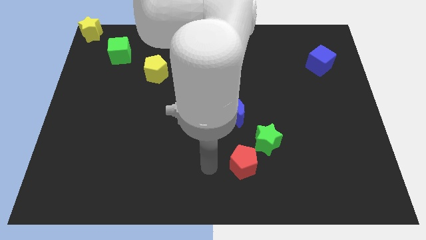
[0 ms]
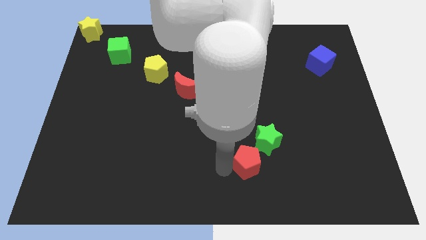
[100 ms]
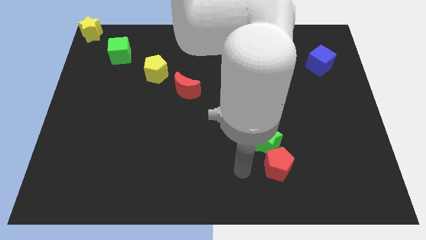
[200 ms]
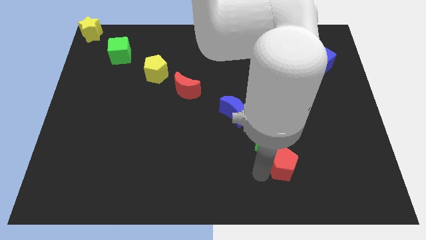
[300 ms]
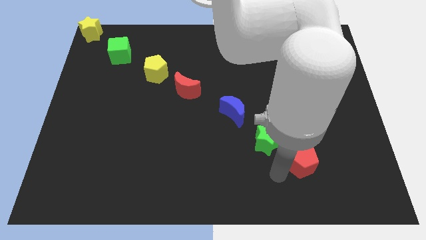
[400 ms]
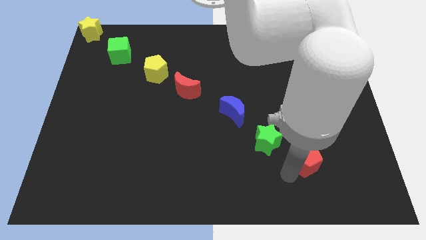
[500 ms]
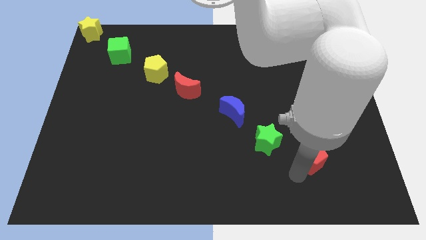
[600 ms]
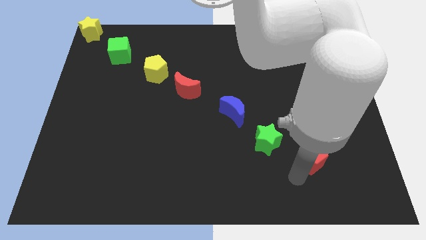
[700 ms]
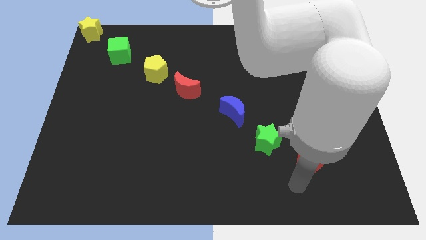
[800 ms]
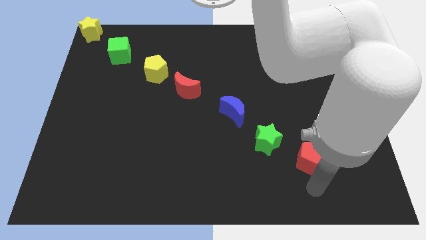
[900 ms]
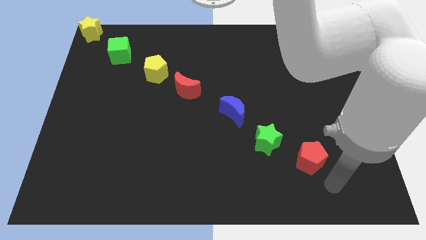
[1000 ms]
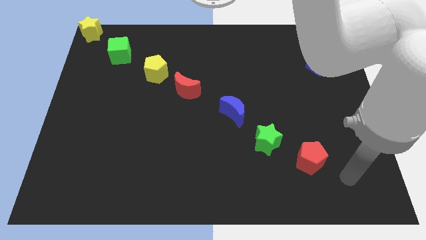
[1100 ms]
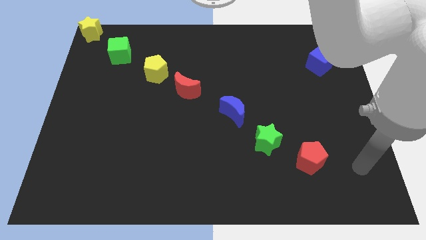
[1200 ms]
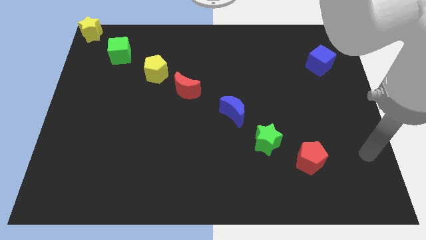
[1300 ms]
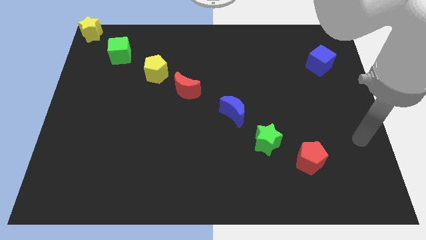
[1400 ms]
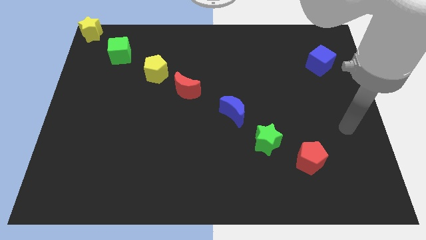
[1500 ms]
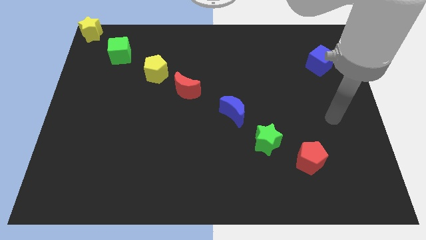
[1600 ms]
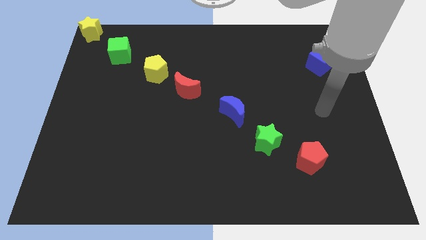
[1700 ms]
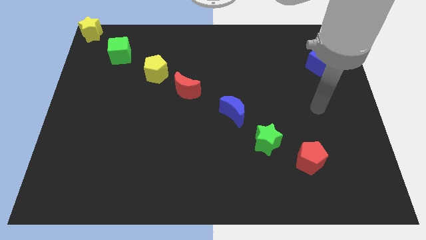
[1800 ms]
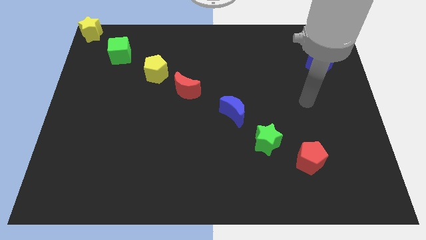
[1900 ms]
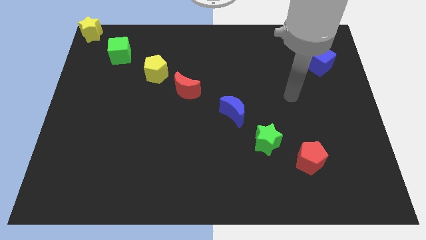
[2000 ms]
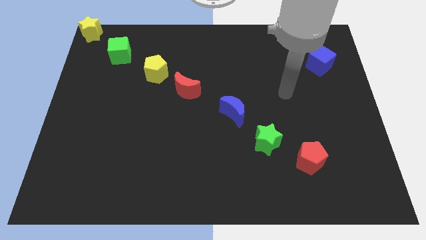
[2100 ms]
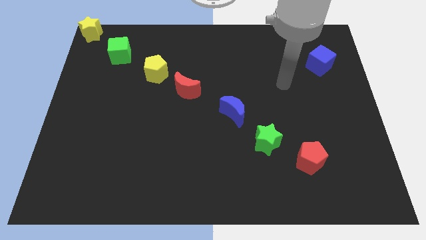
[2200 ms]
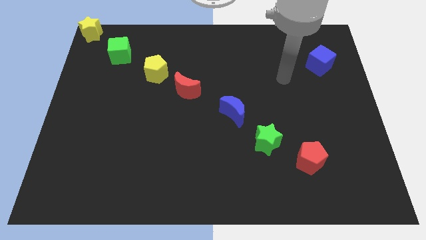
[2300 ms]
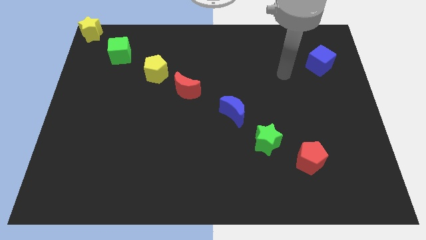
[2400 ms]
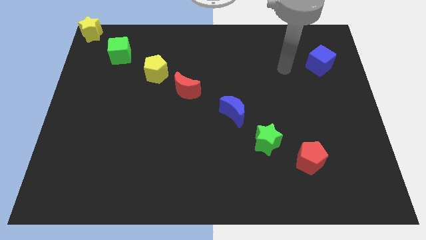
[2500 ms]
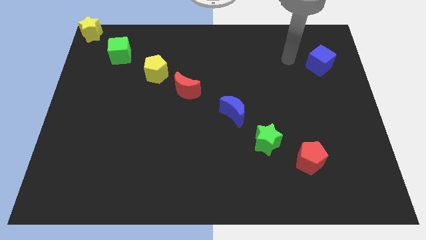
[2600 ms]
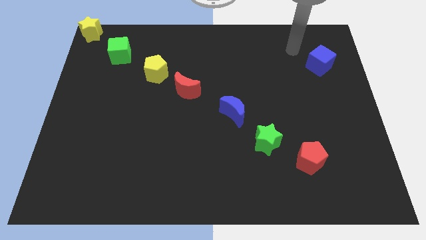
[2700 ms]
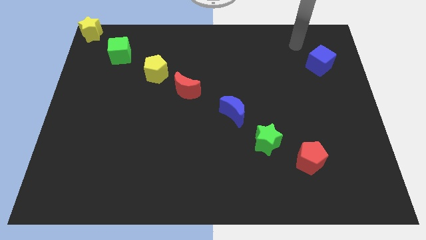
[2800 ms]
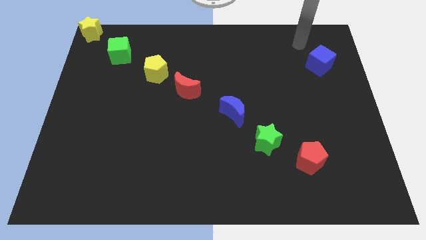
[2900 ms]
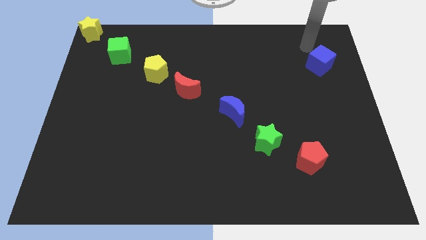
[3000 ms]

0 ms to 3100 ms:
place the red pentagon to the right of the green star

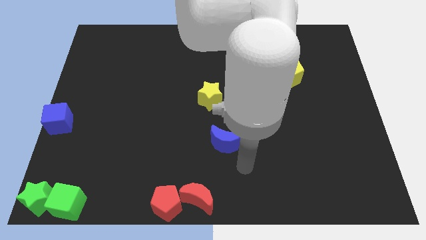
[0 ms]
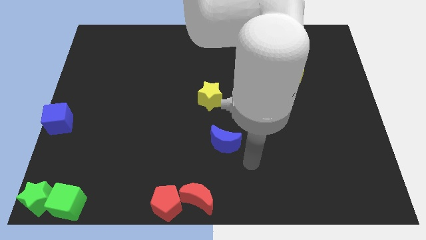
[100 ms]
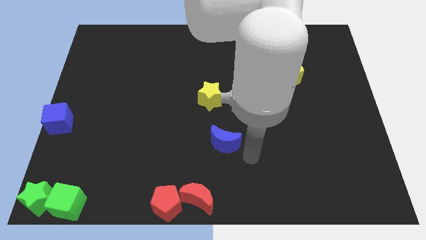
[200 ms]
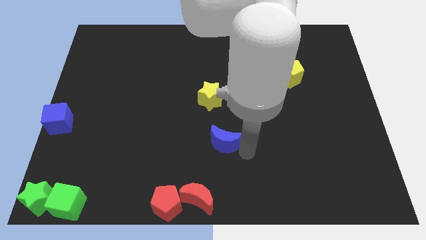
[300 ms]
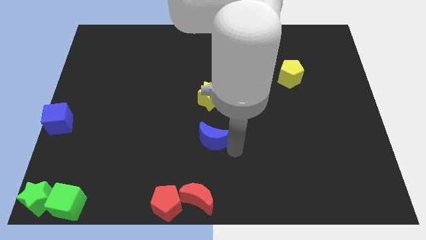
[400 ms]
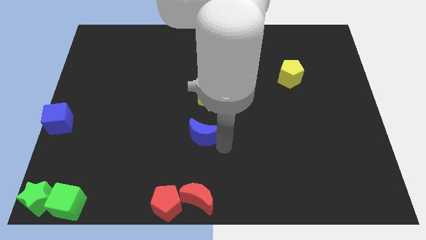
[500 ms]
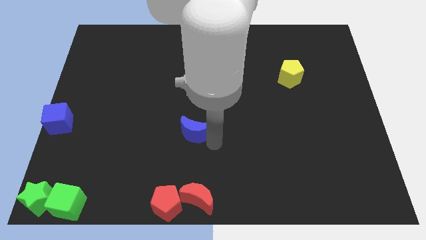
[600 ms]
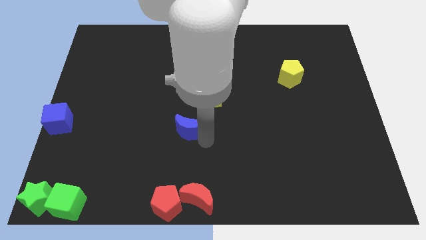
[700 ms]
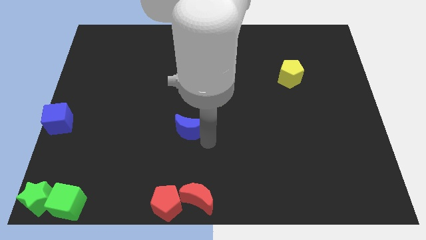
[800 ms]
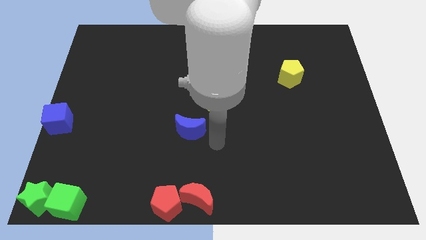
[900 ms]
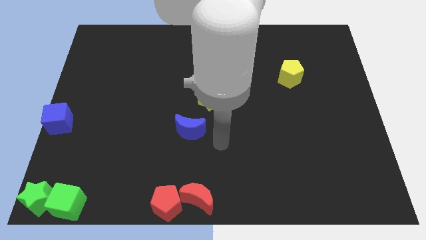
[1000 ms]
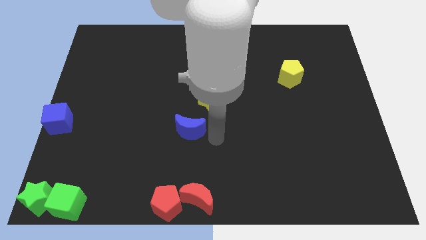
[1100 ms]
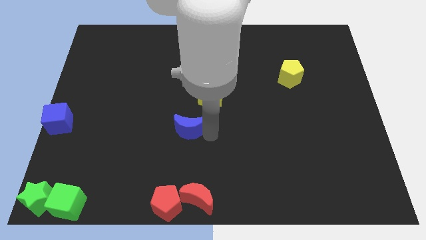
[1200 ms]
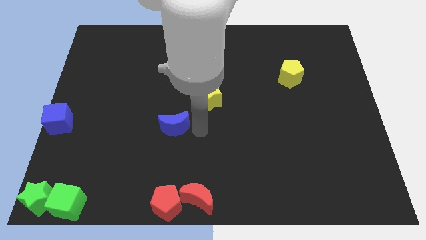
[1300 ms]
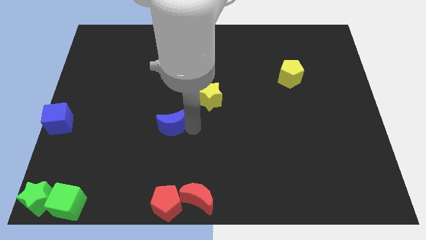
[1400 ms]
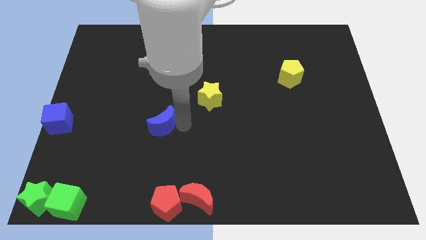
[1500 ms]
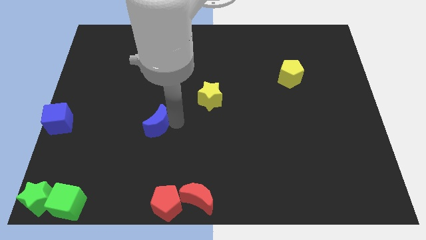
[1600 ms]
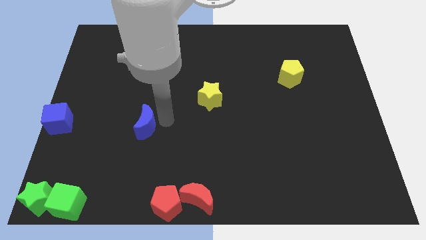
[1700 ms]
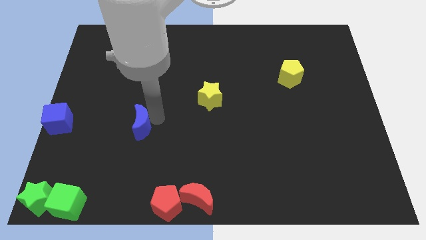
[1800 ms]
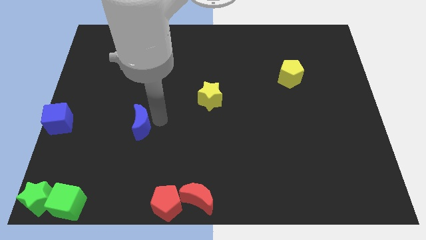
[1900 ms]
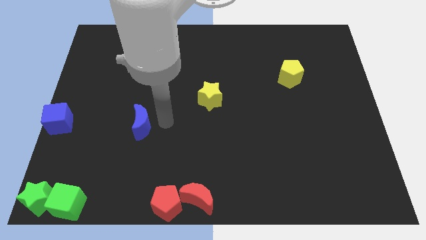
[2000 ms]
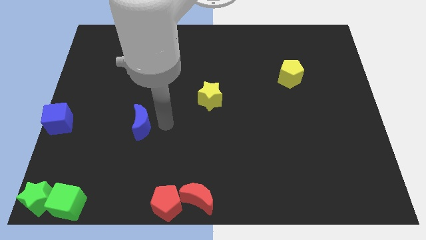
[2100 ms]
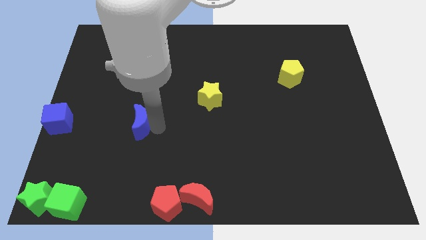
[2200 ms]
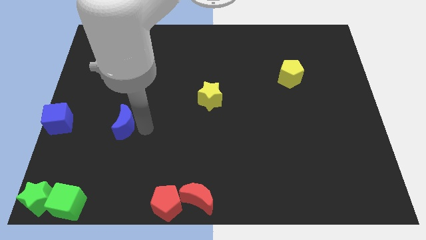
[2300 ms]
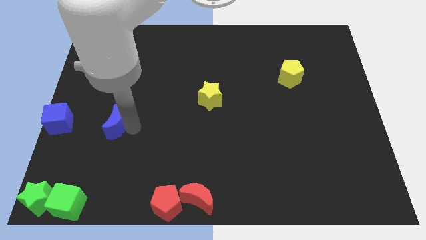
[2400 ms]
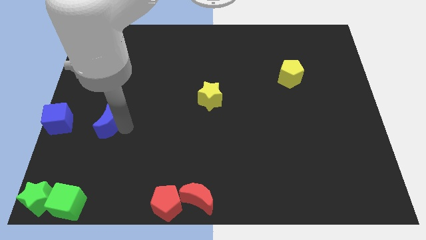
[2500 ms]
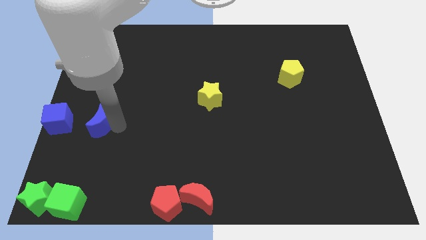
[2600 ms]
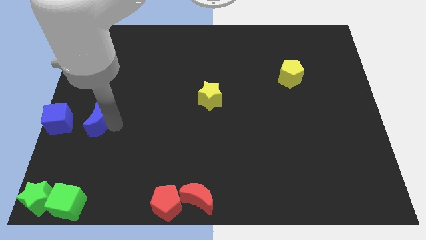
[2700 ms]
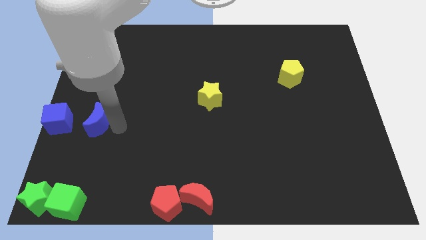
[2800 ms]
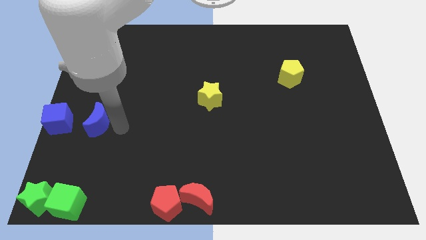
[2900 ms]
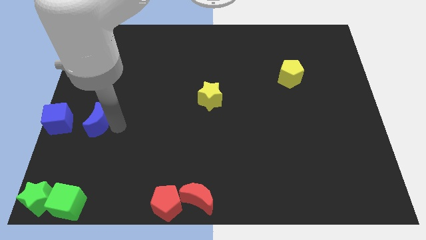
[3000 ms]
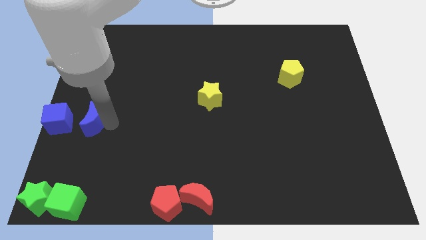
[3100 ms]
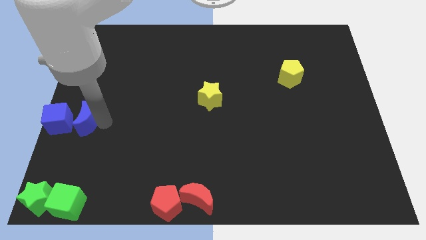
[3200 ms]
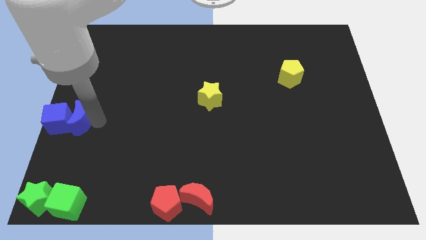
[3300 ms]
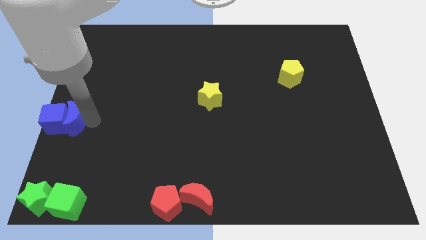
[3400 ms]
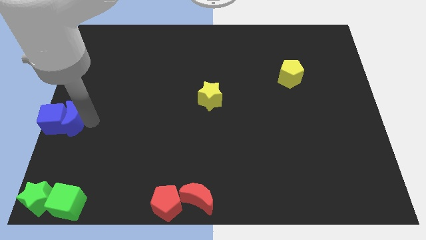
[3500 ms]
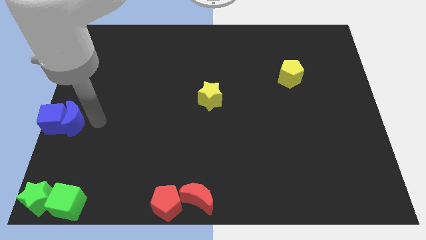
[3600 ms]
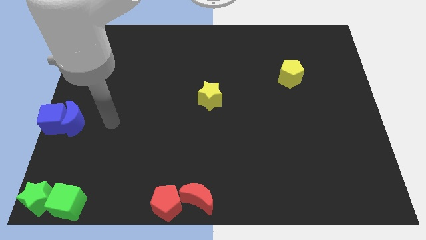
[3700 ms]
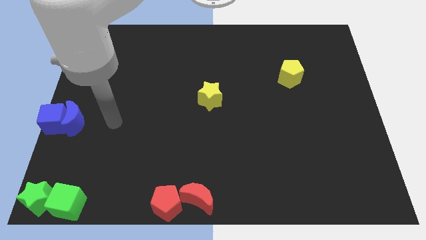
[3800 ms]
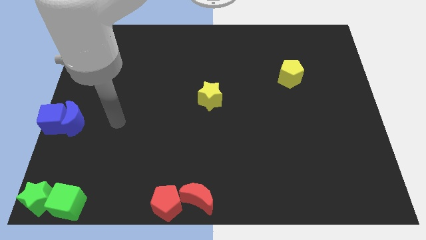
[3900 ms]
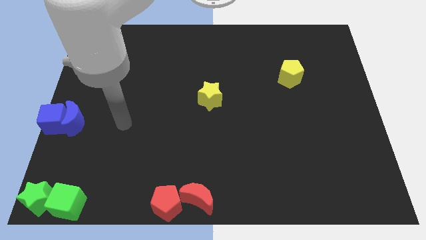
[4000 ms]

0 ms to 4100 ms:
place the blue moon into blue cube

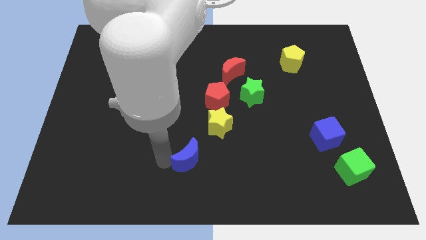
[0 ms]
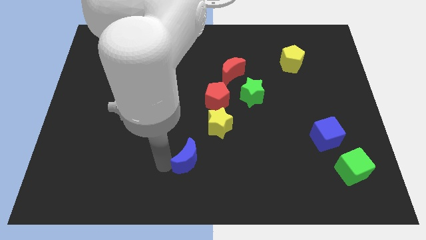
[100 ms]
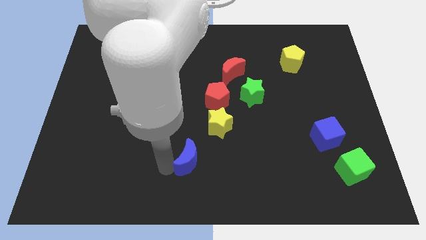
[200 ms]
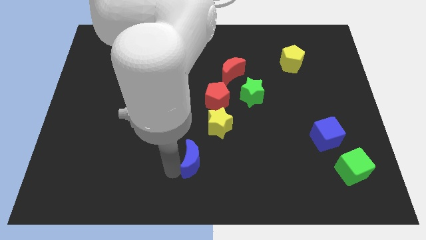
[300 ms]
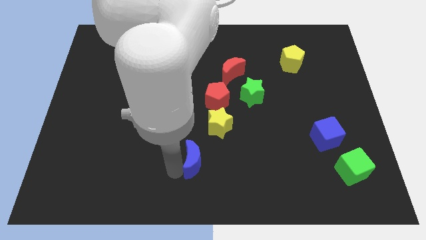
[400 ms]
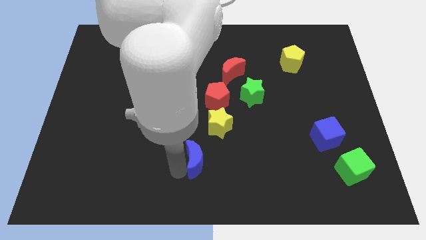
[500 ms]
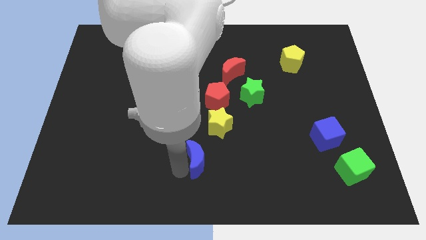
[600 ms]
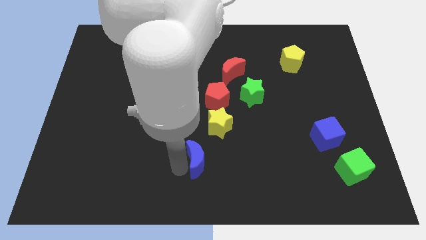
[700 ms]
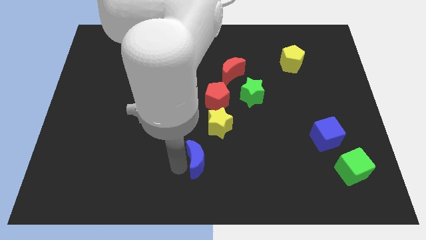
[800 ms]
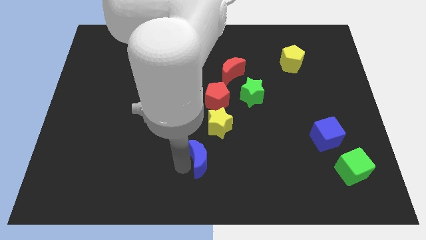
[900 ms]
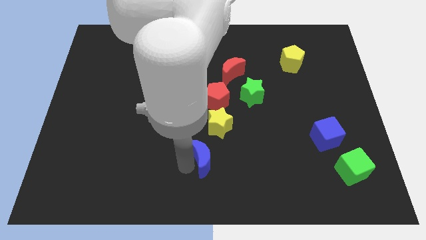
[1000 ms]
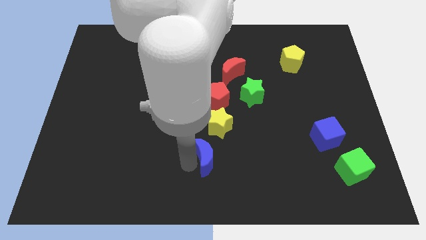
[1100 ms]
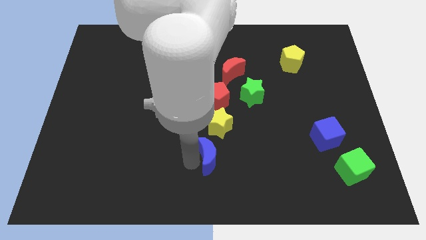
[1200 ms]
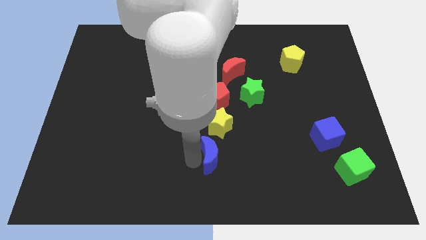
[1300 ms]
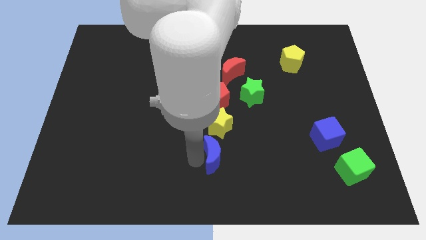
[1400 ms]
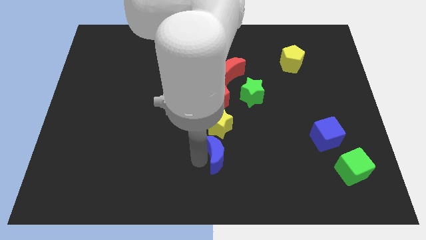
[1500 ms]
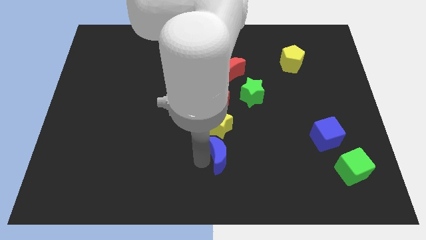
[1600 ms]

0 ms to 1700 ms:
push the blue moon slightly to the right side of the board

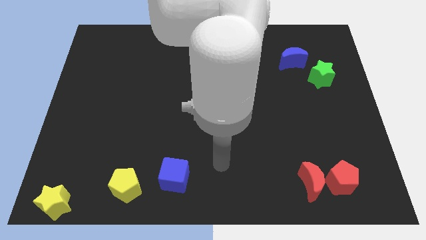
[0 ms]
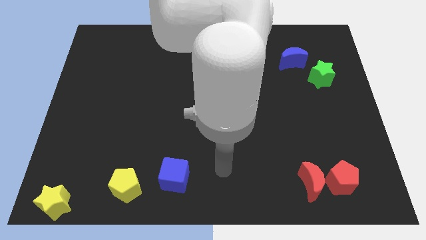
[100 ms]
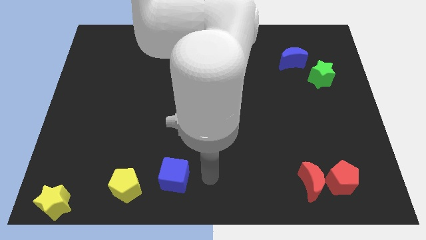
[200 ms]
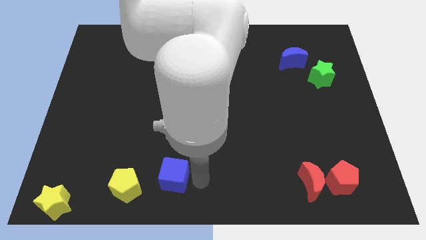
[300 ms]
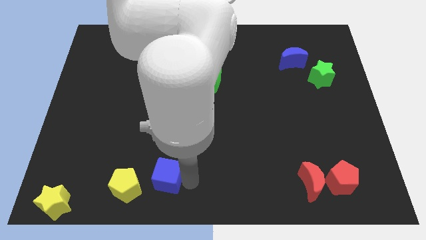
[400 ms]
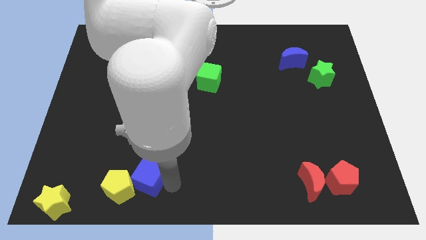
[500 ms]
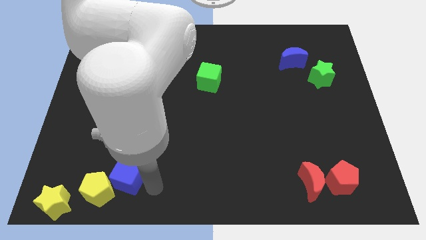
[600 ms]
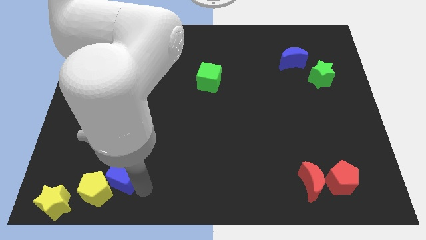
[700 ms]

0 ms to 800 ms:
push blue cube in to yellow pentagon
